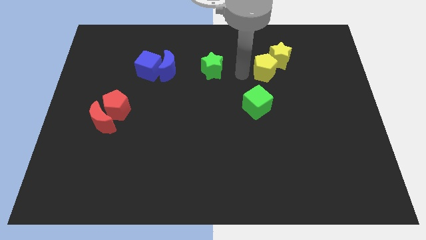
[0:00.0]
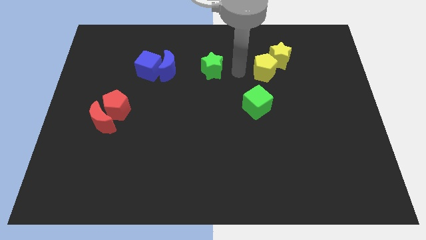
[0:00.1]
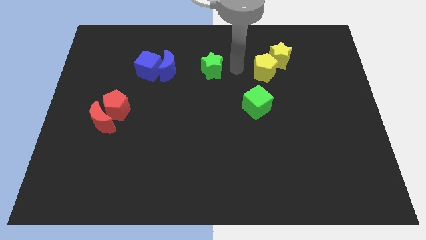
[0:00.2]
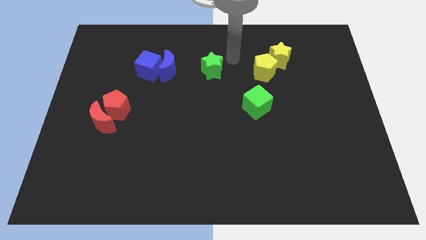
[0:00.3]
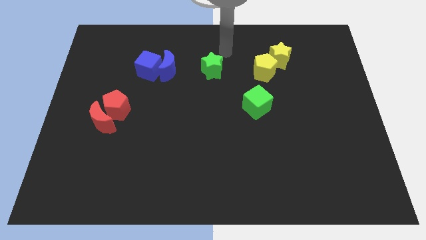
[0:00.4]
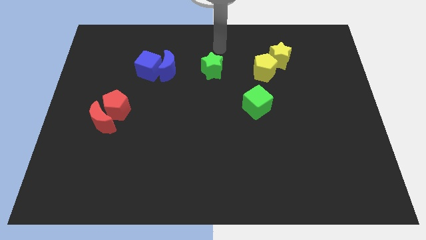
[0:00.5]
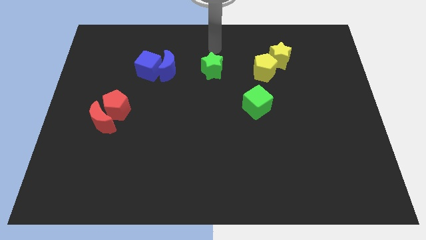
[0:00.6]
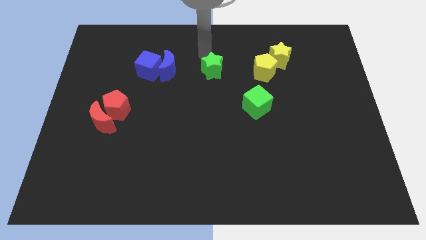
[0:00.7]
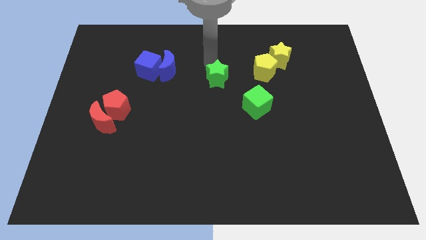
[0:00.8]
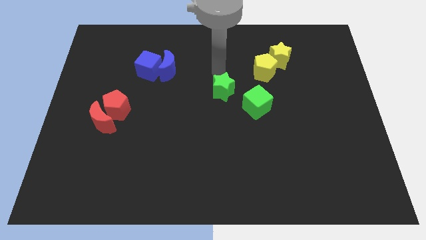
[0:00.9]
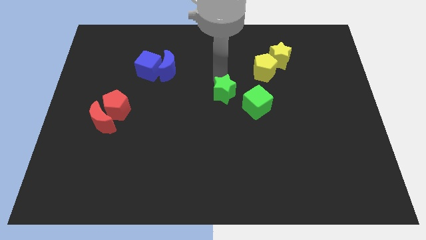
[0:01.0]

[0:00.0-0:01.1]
move green star downwards

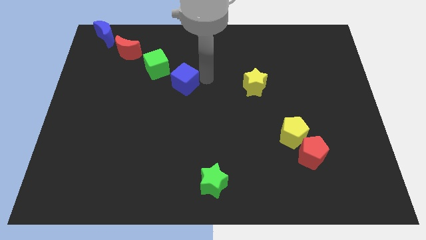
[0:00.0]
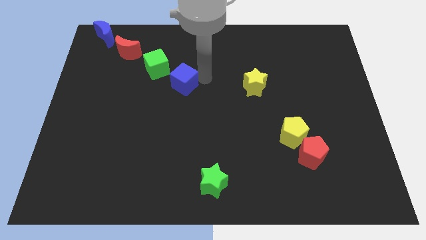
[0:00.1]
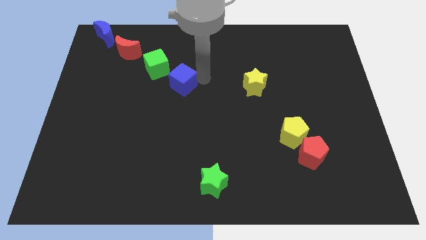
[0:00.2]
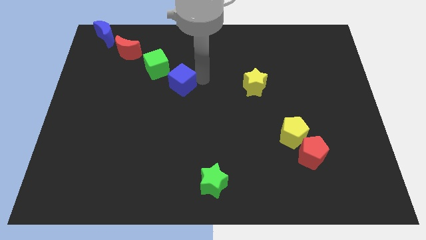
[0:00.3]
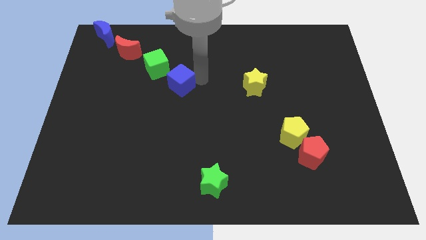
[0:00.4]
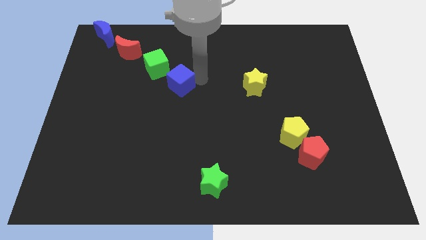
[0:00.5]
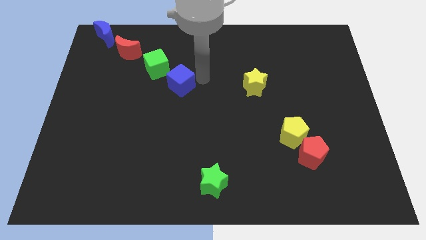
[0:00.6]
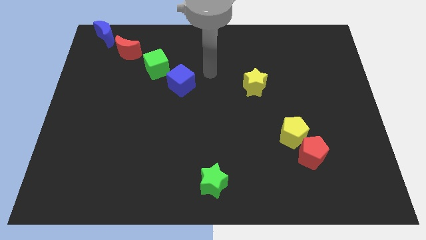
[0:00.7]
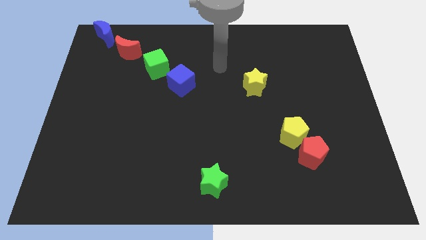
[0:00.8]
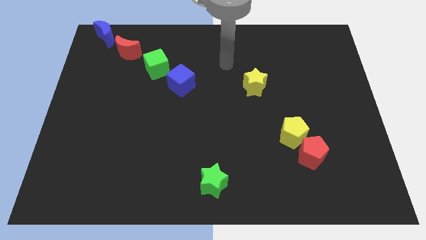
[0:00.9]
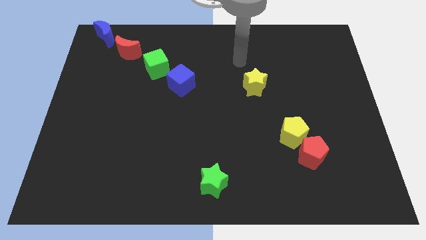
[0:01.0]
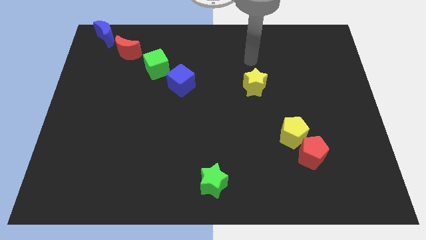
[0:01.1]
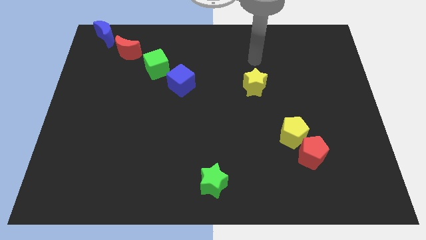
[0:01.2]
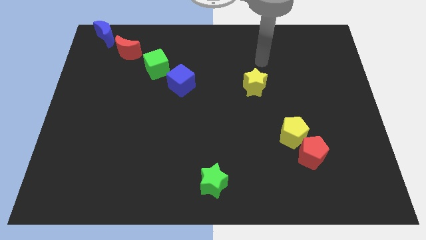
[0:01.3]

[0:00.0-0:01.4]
place your hand above the yellow star

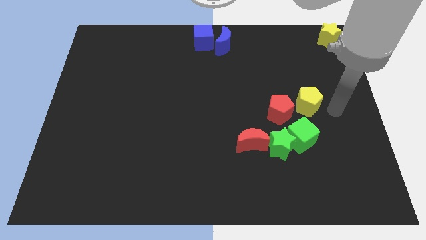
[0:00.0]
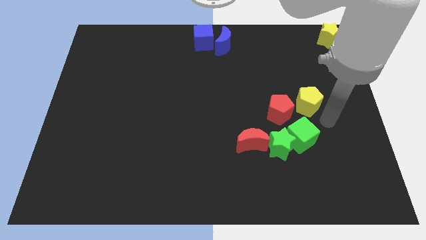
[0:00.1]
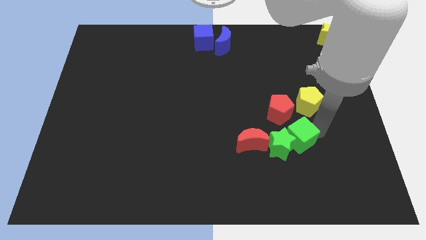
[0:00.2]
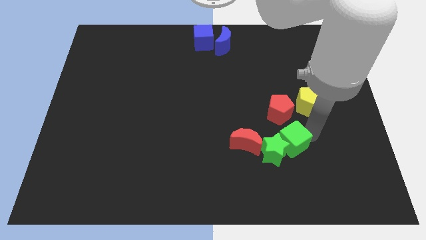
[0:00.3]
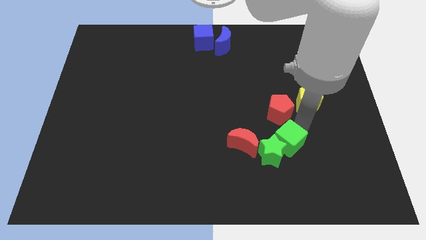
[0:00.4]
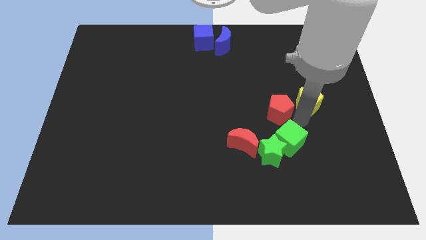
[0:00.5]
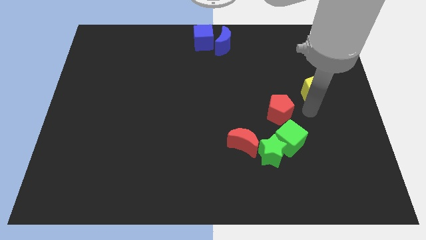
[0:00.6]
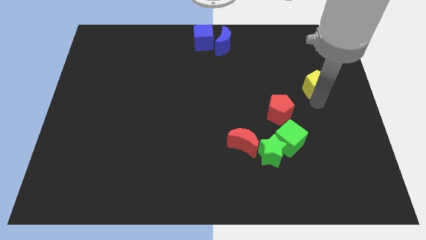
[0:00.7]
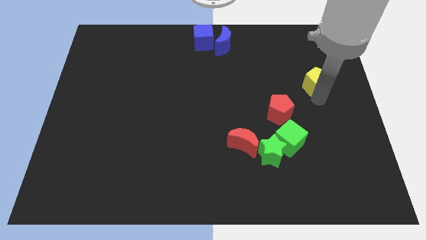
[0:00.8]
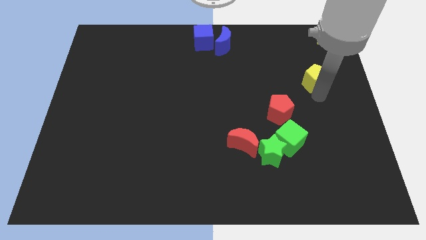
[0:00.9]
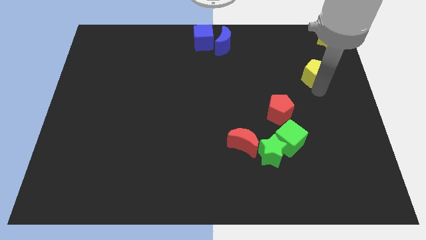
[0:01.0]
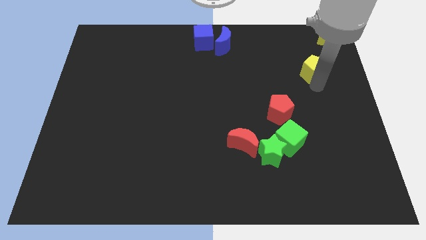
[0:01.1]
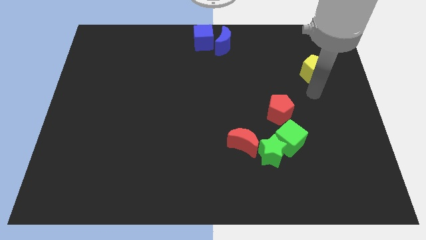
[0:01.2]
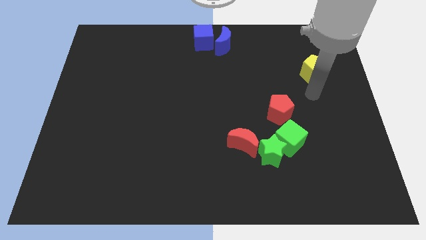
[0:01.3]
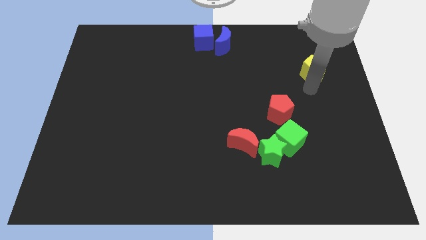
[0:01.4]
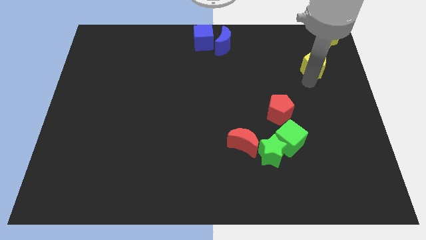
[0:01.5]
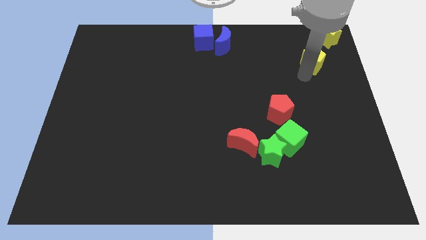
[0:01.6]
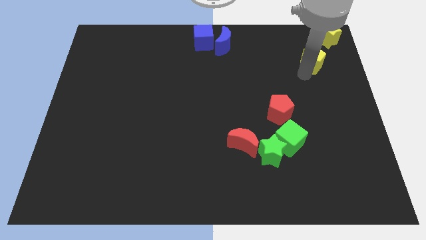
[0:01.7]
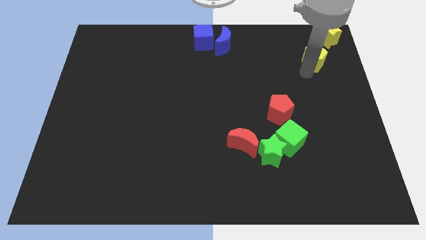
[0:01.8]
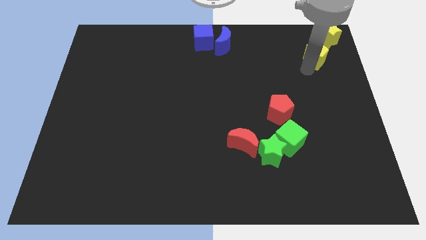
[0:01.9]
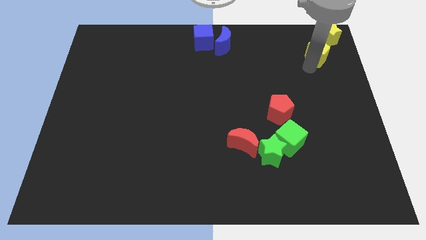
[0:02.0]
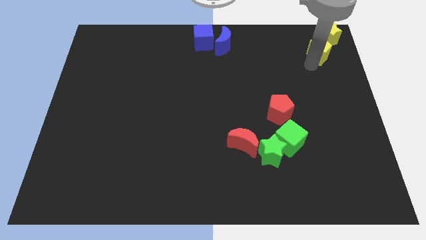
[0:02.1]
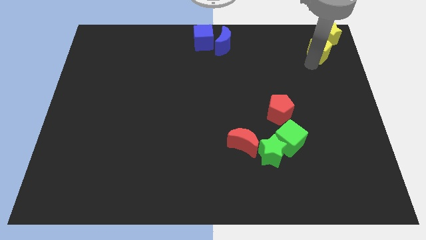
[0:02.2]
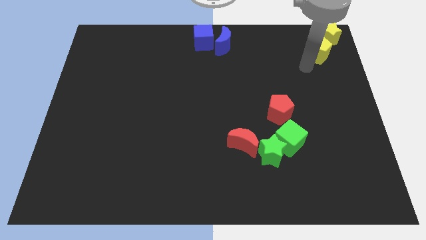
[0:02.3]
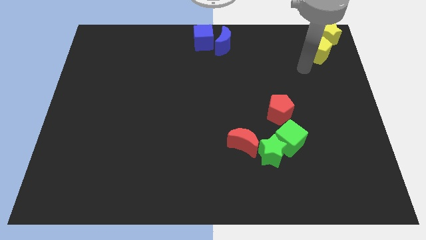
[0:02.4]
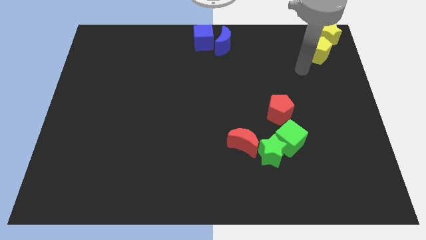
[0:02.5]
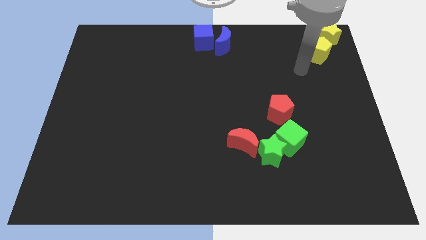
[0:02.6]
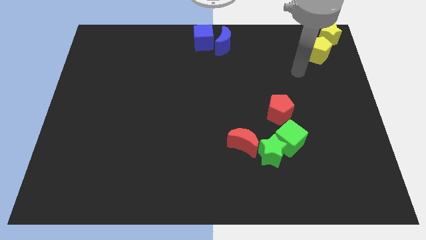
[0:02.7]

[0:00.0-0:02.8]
move the yellow pentagon close to the yellow star

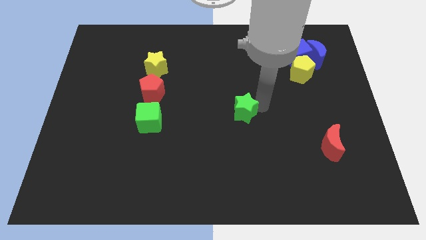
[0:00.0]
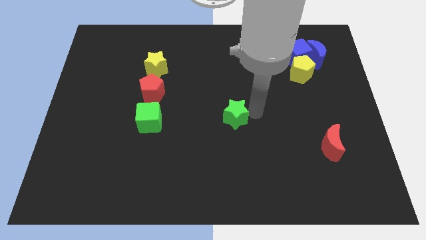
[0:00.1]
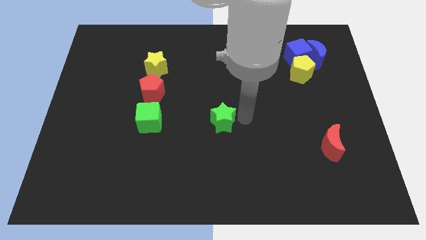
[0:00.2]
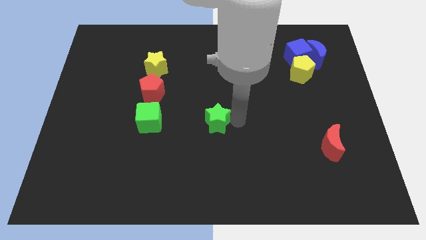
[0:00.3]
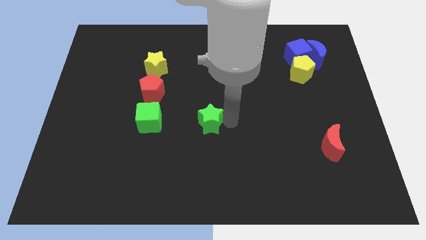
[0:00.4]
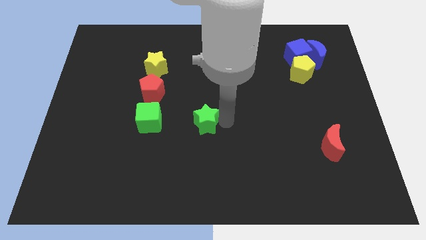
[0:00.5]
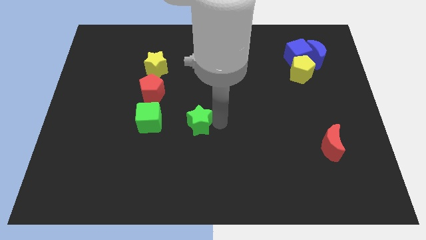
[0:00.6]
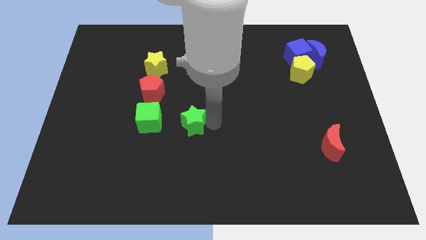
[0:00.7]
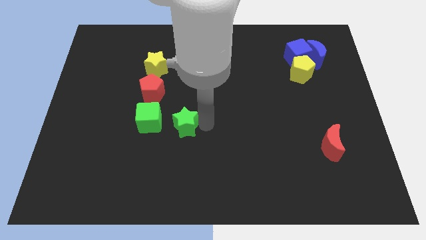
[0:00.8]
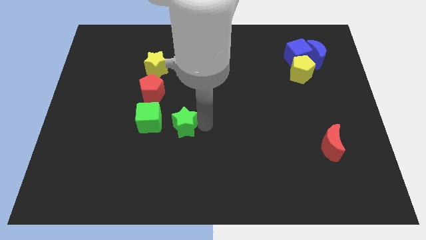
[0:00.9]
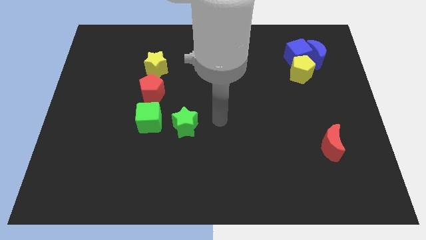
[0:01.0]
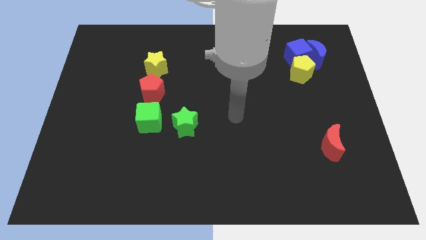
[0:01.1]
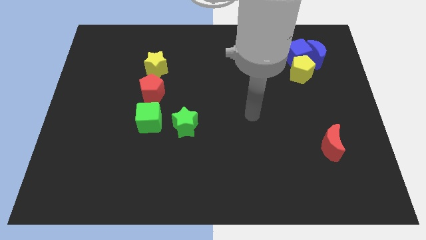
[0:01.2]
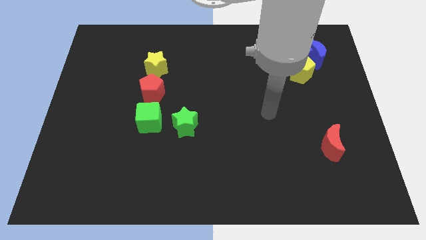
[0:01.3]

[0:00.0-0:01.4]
slide the green star slightly towards the green cube

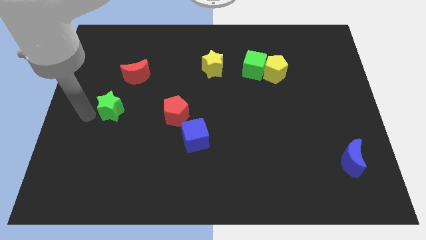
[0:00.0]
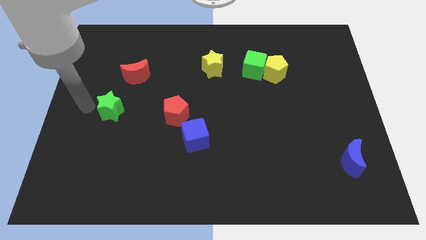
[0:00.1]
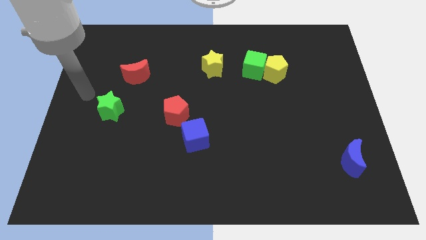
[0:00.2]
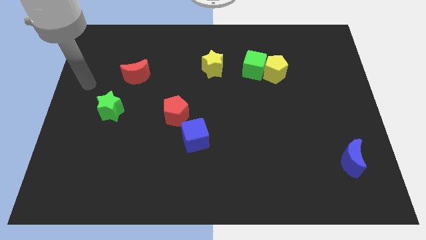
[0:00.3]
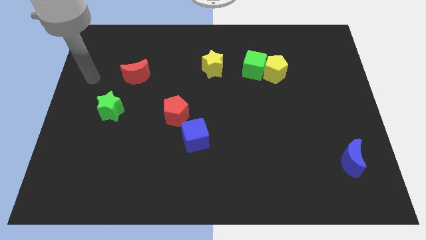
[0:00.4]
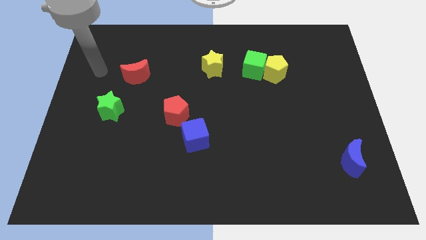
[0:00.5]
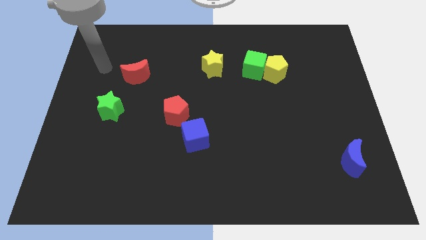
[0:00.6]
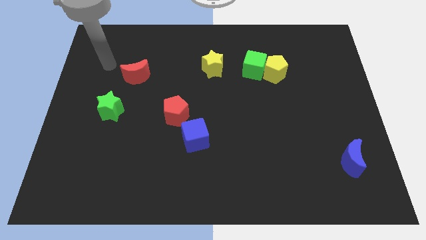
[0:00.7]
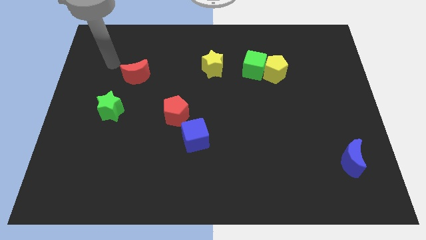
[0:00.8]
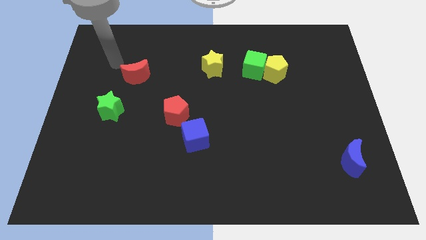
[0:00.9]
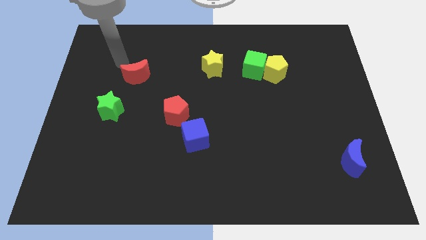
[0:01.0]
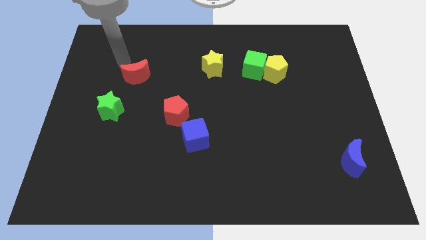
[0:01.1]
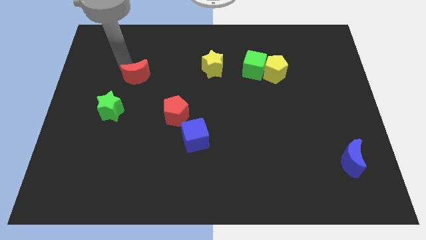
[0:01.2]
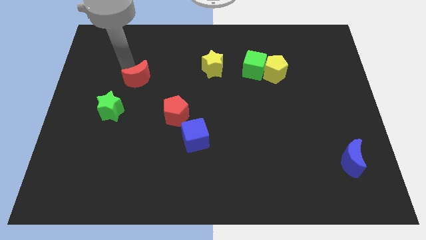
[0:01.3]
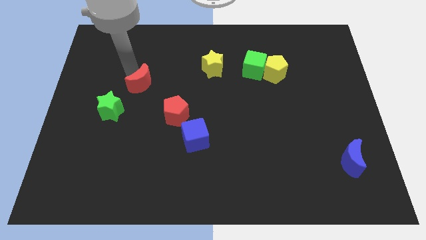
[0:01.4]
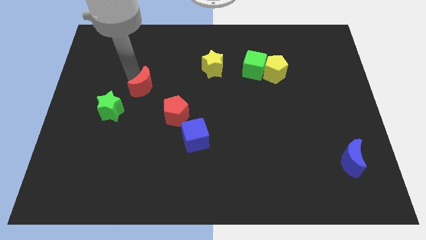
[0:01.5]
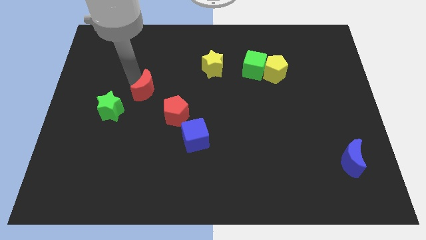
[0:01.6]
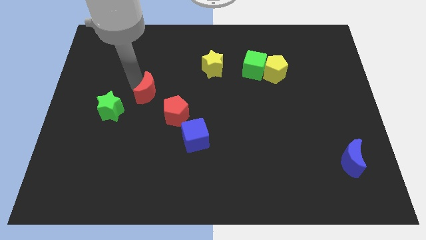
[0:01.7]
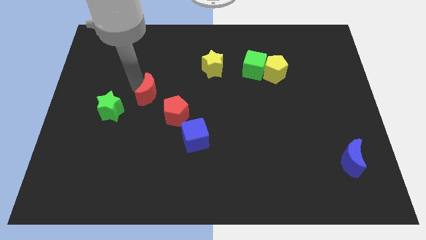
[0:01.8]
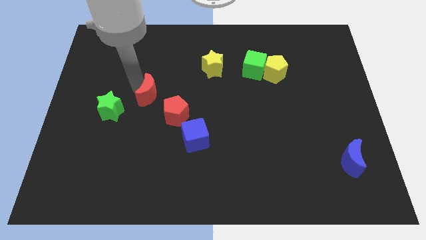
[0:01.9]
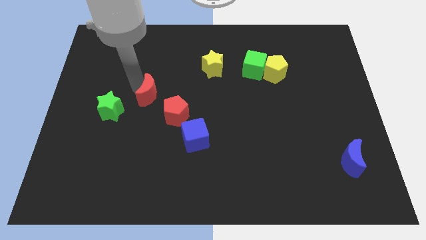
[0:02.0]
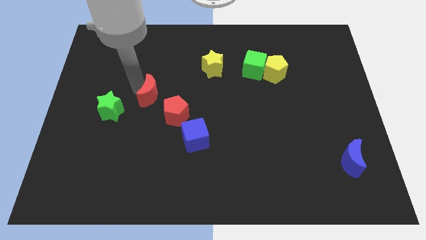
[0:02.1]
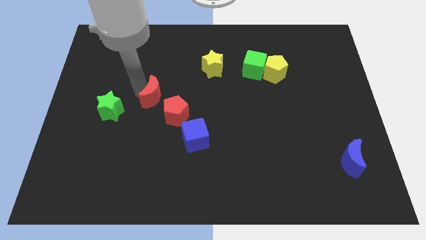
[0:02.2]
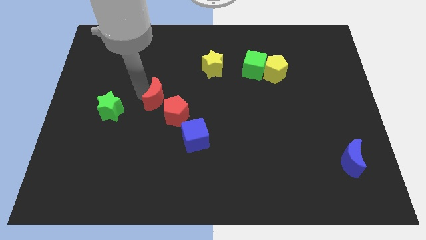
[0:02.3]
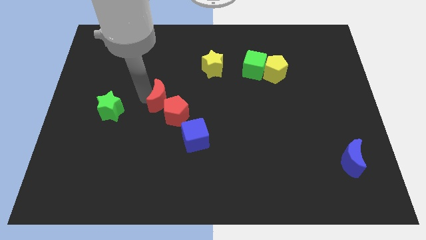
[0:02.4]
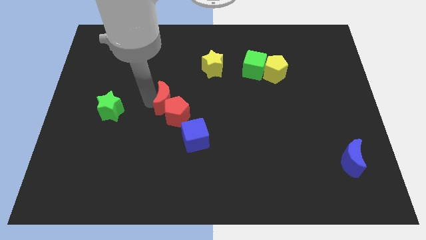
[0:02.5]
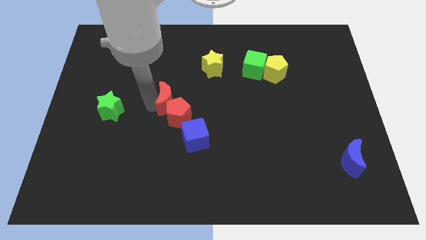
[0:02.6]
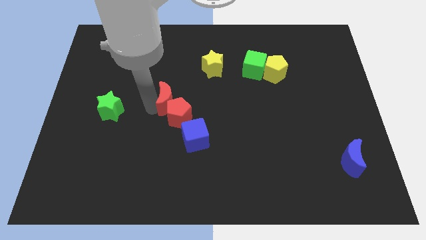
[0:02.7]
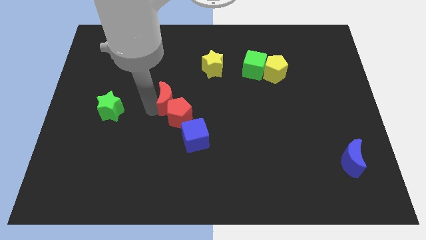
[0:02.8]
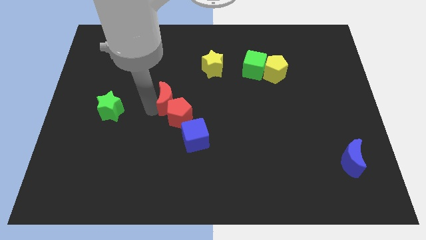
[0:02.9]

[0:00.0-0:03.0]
move the red moon into the red pentagon diagonally
